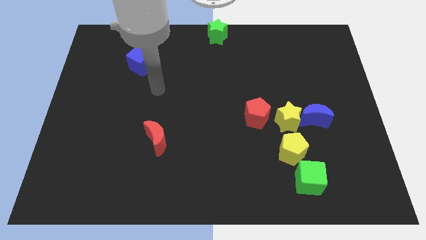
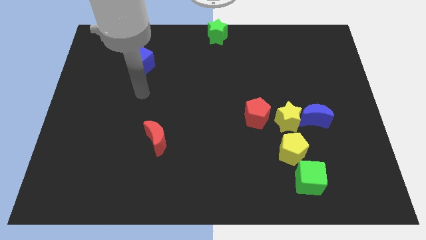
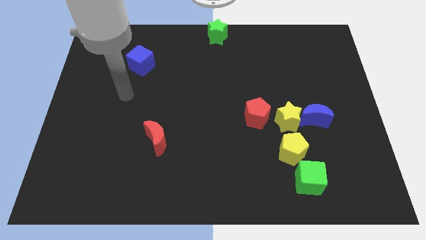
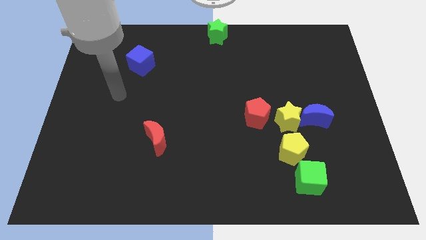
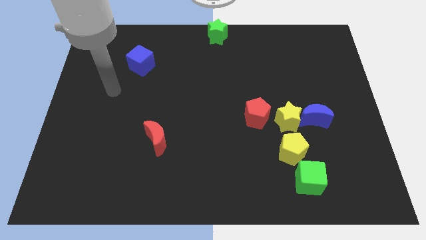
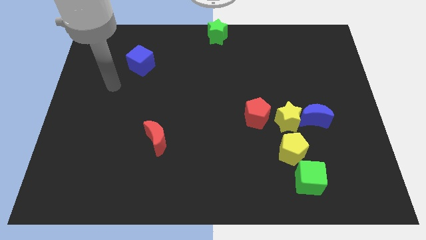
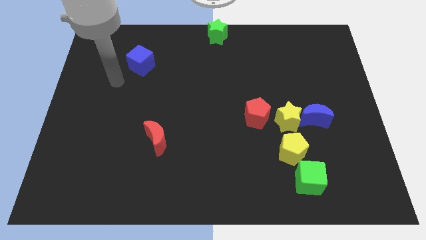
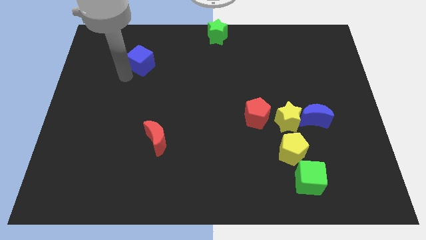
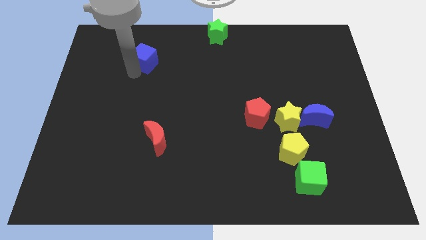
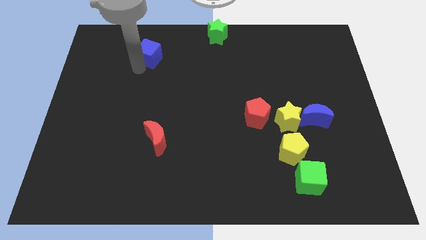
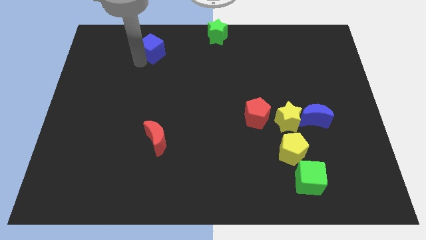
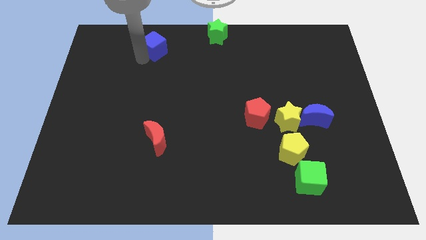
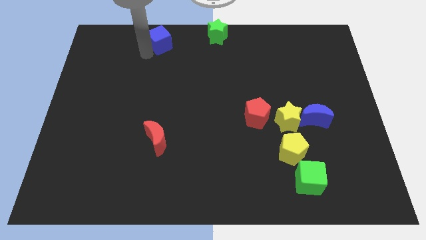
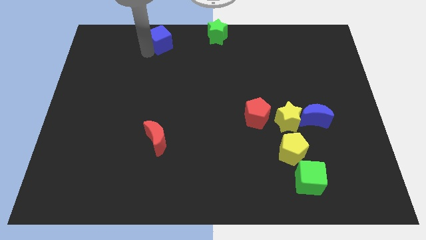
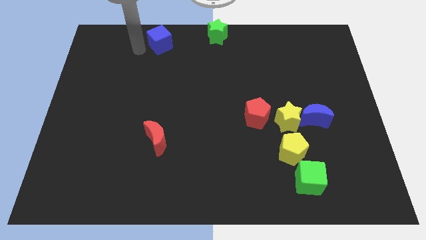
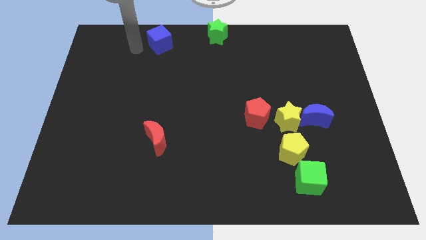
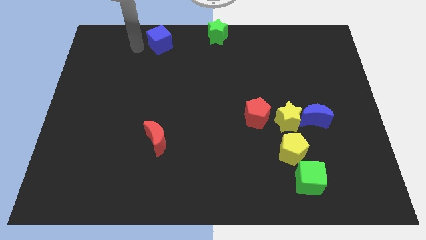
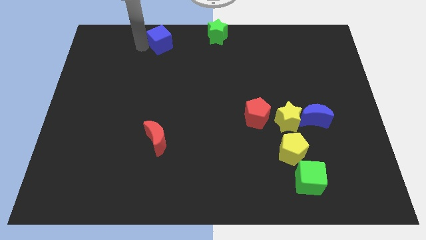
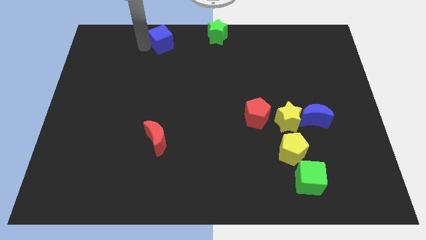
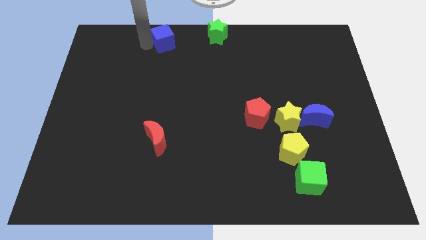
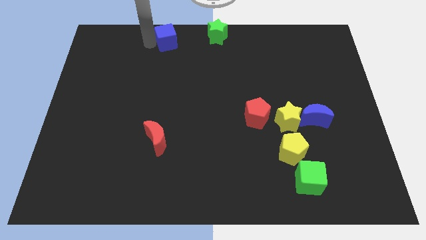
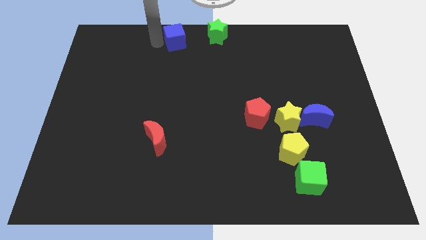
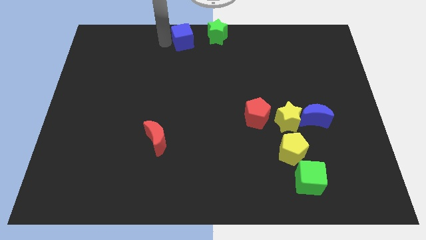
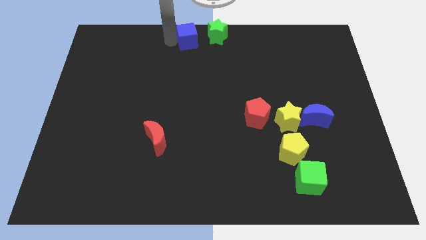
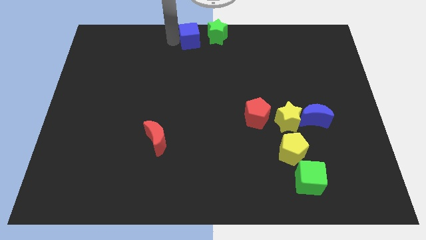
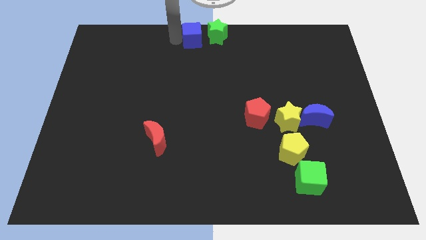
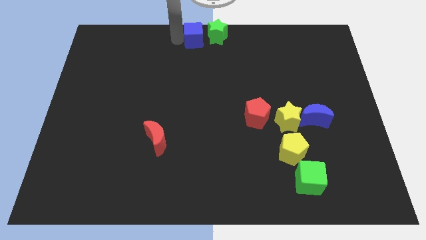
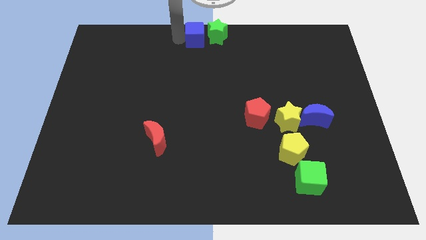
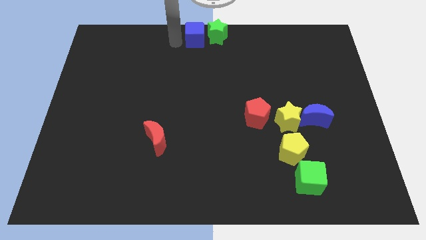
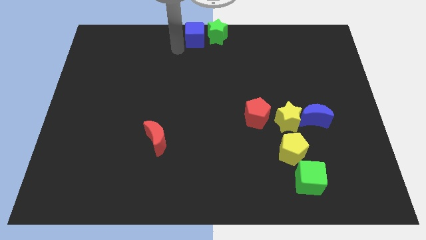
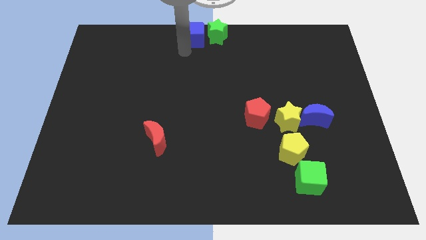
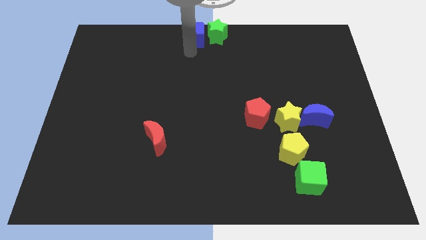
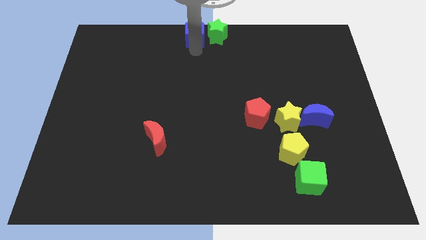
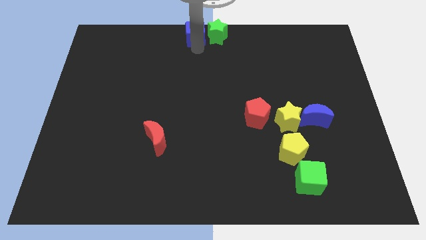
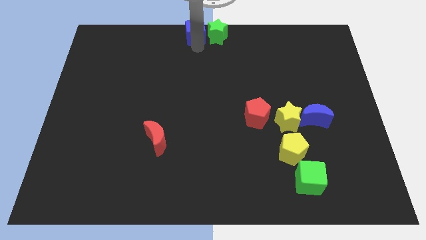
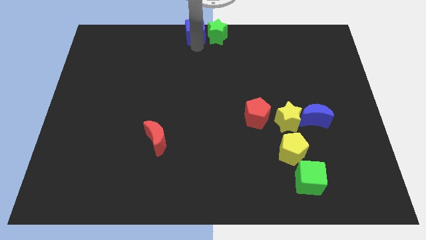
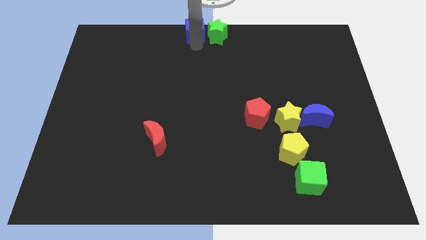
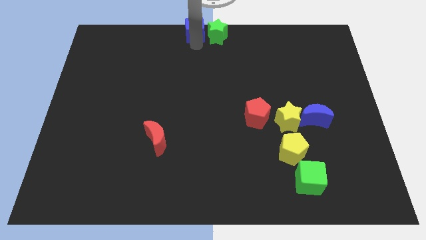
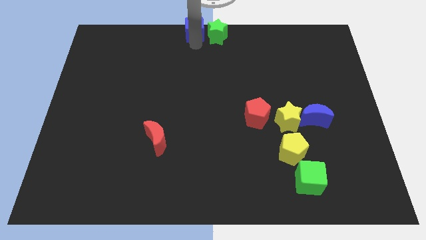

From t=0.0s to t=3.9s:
place blue block to the left of green star

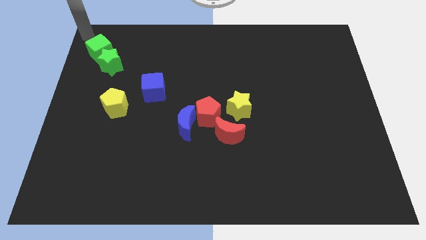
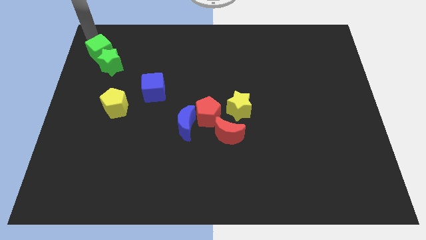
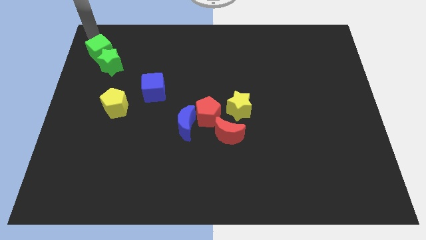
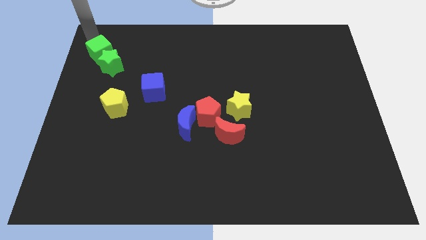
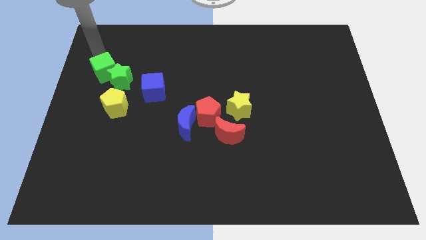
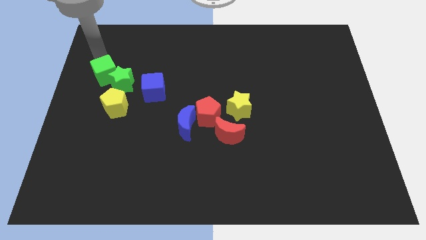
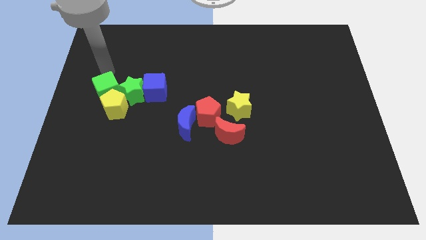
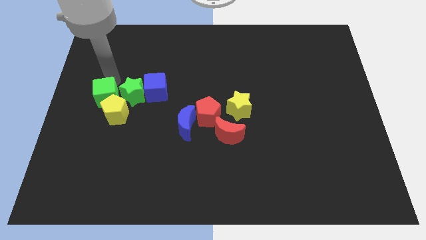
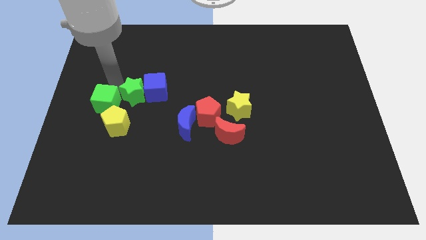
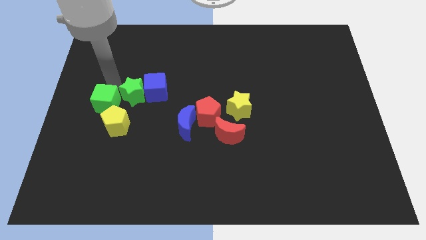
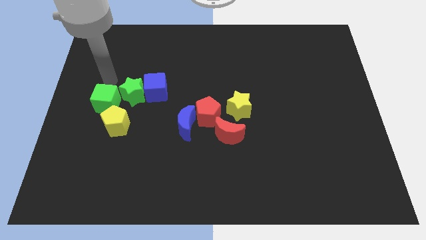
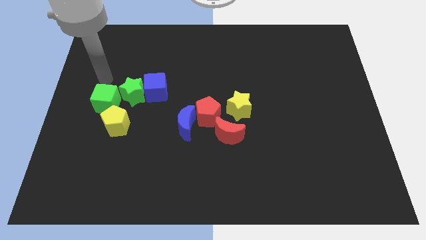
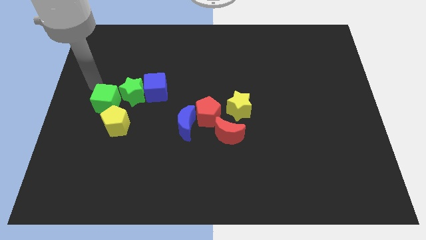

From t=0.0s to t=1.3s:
push the green blocks towards the blue cube and the yellow pentagon

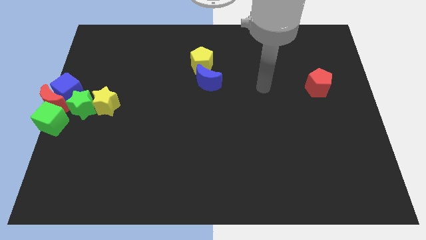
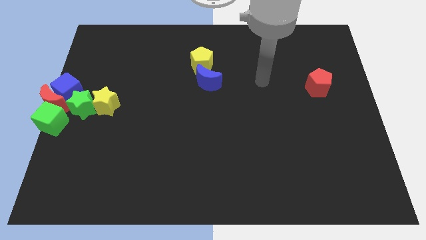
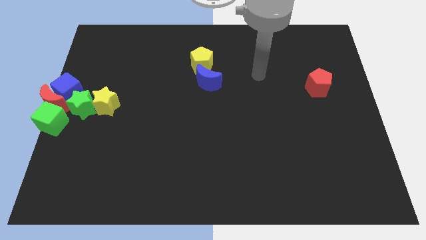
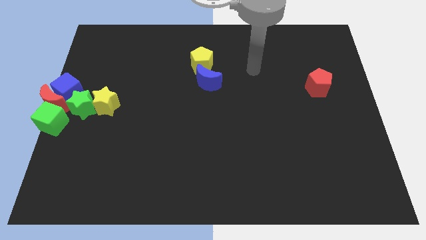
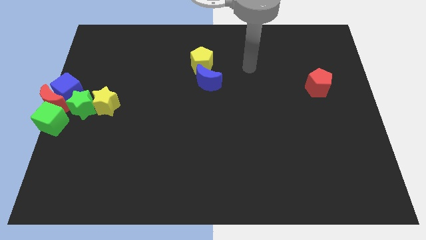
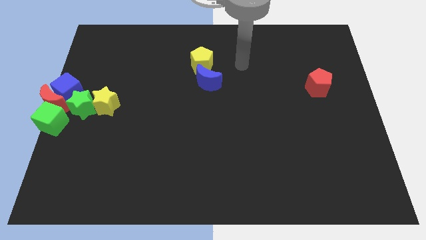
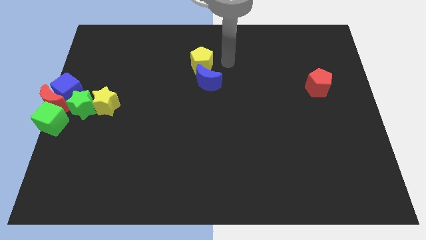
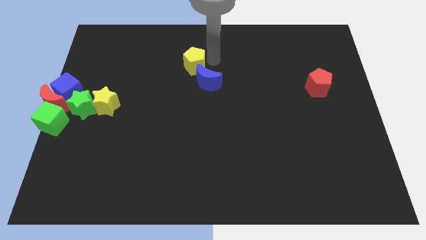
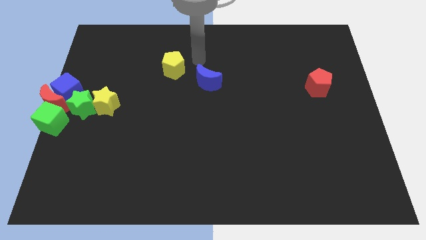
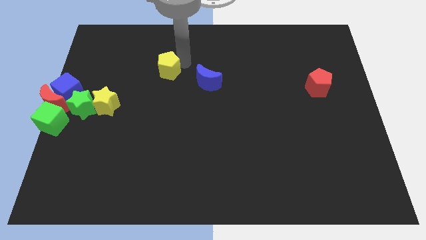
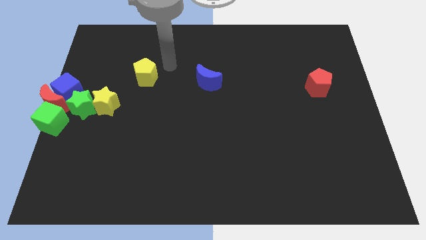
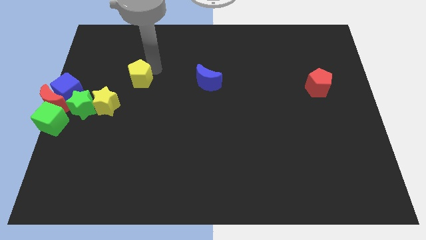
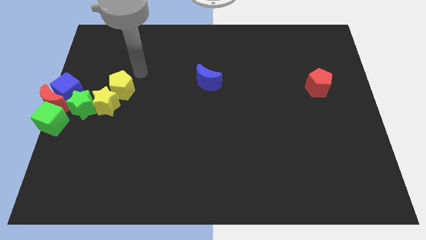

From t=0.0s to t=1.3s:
place the yellow pentagon diagonally top right to the yellow star

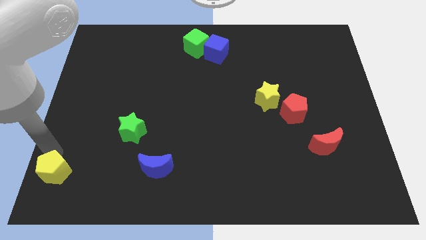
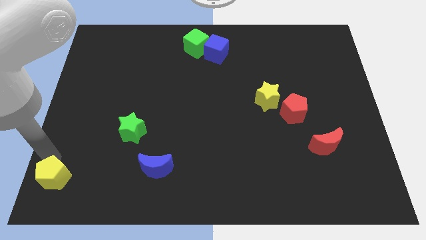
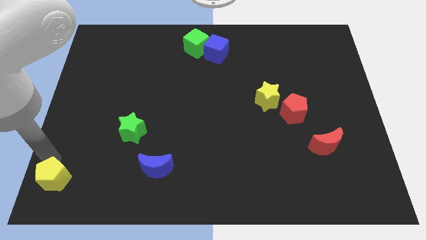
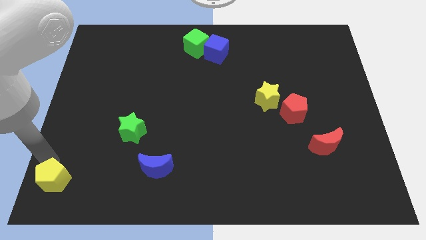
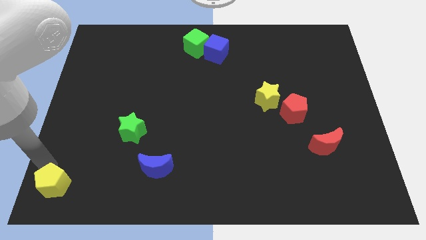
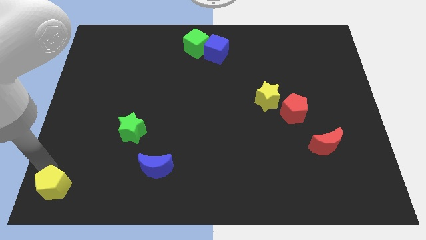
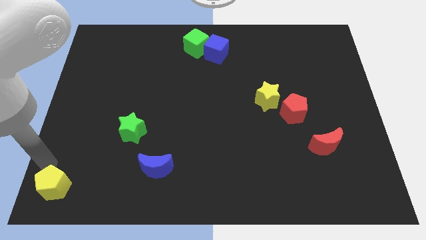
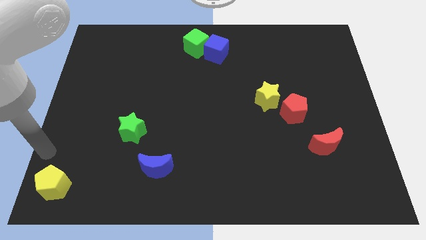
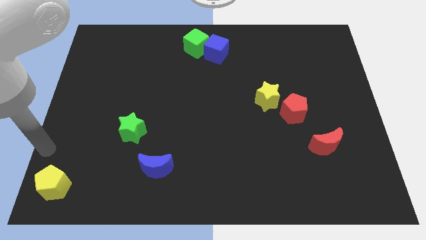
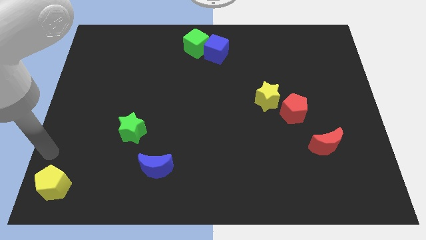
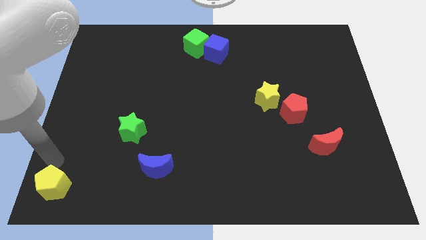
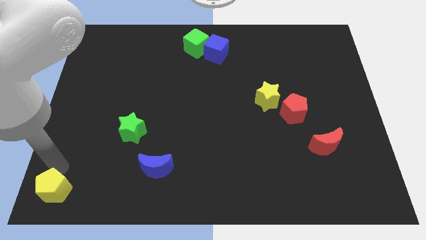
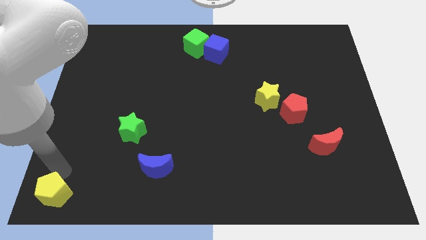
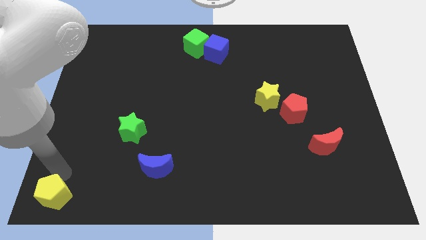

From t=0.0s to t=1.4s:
slide yellow pentagon to bottom left corner

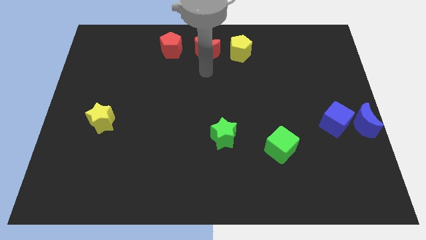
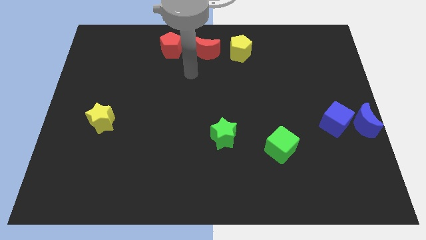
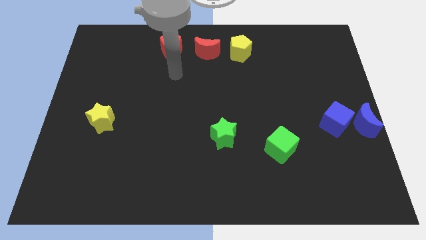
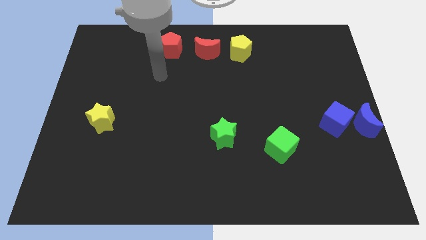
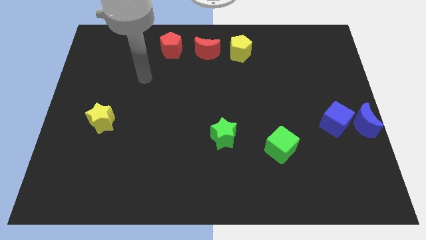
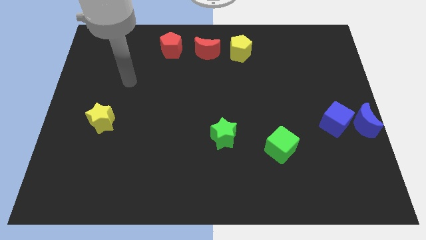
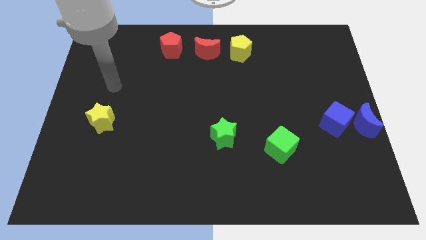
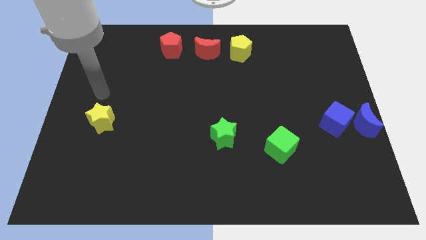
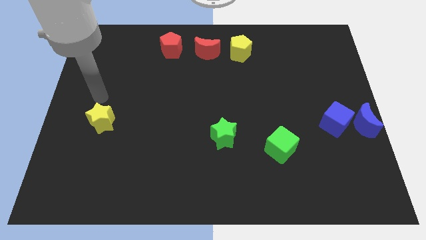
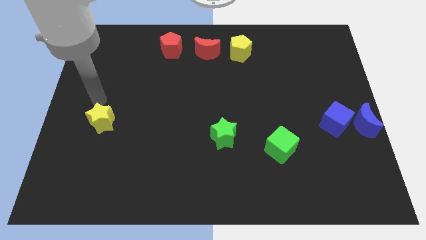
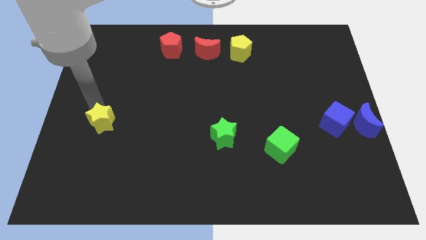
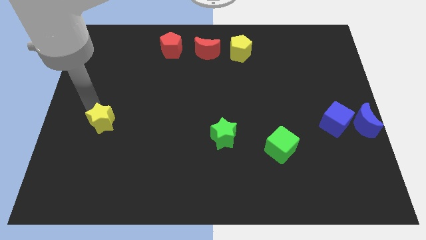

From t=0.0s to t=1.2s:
point the arm above the yellow star
